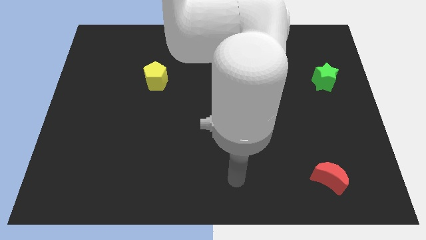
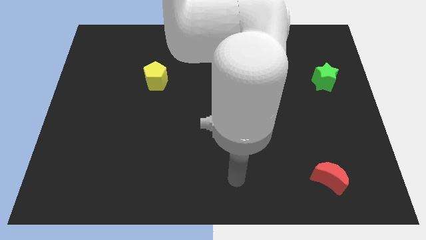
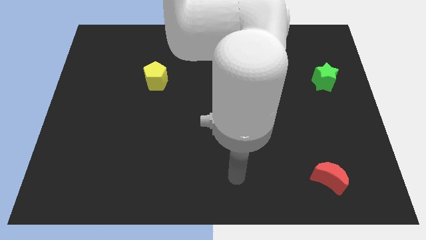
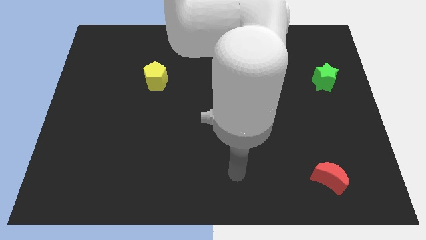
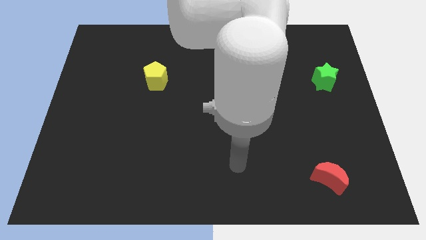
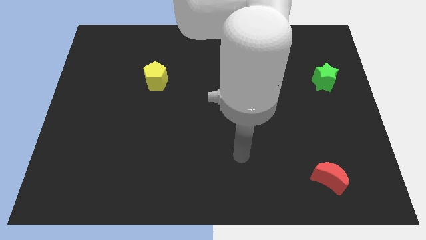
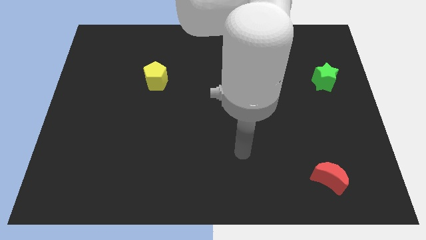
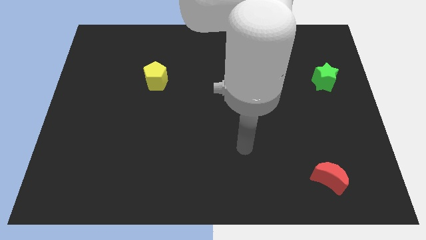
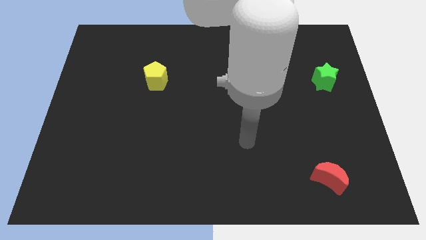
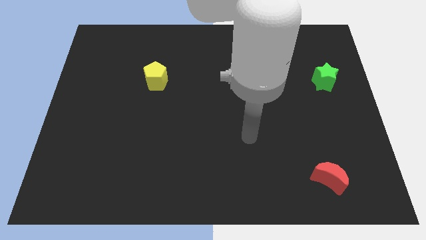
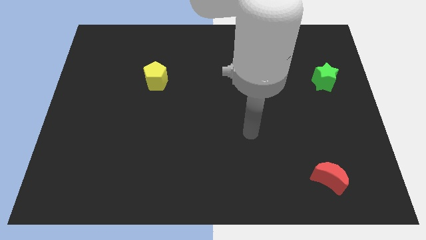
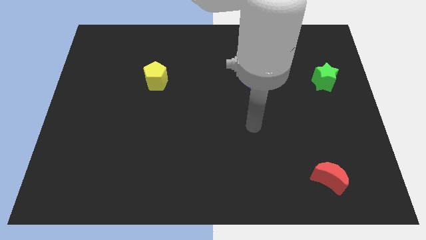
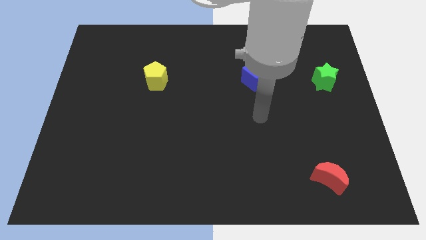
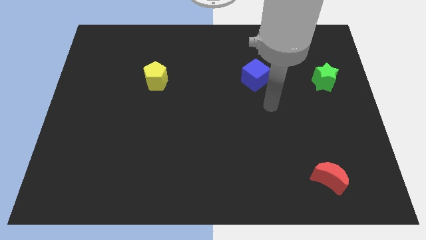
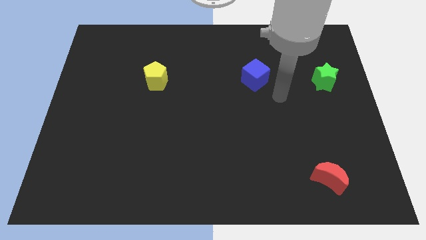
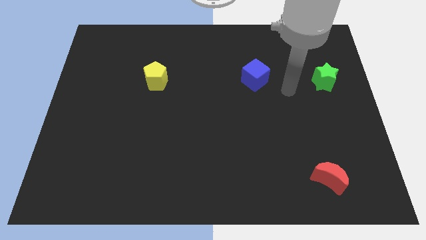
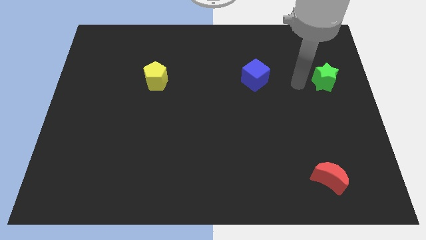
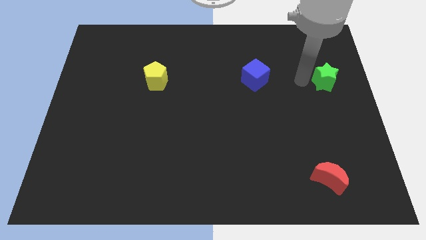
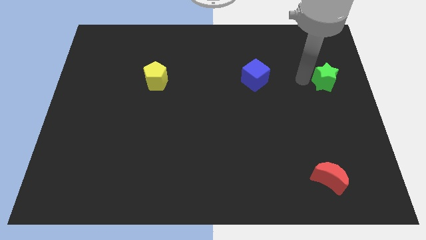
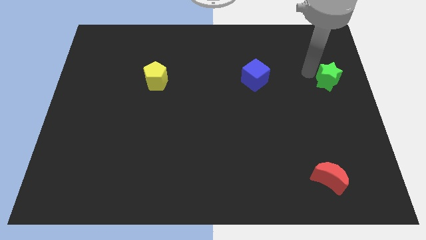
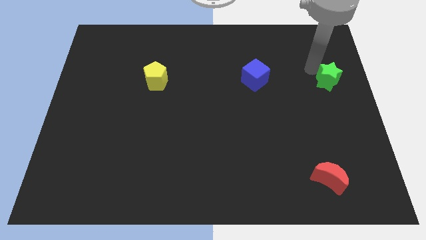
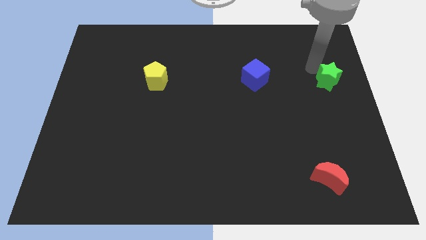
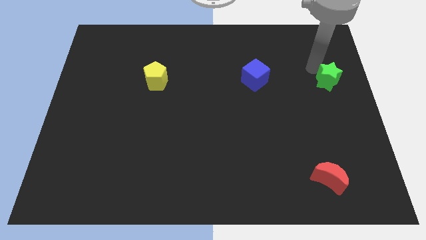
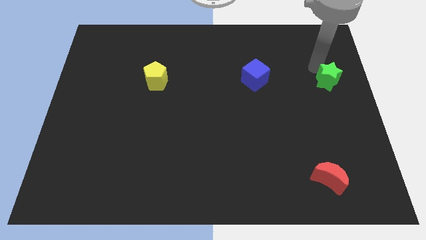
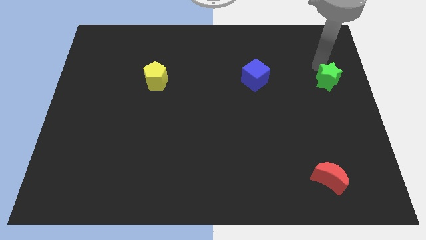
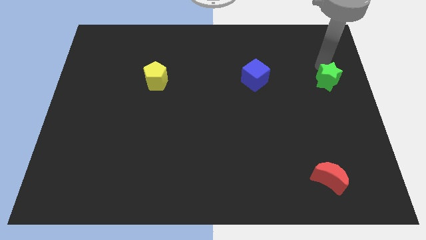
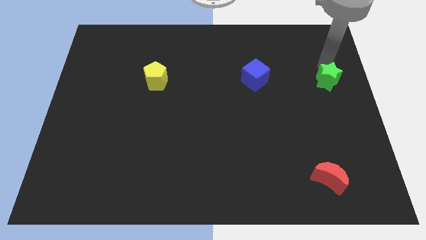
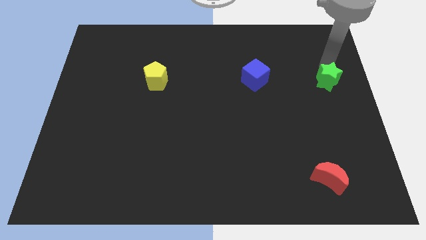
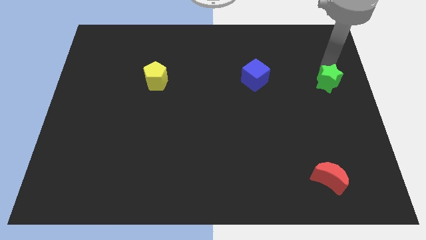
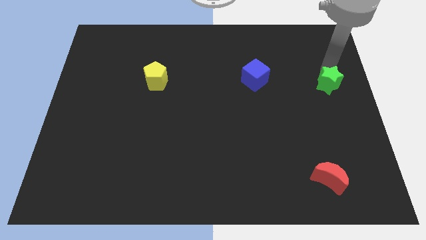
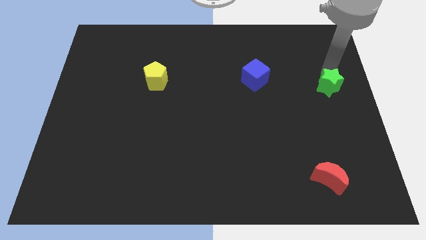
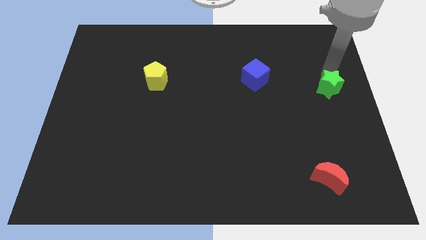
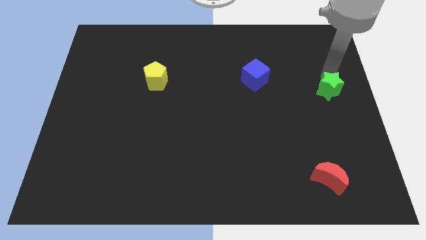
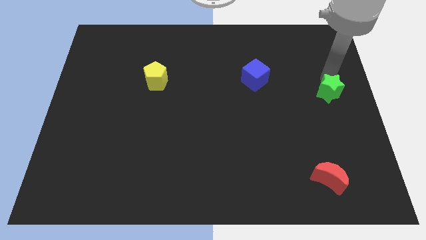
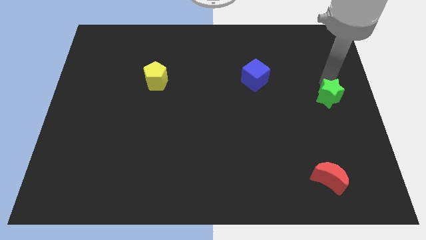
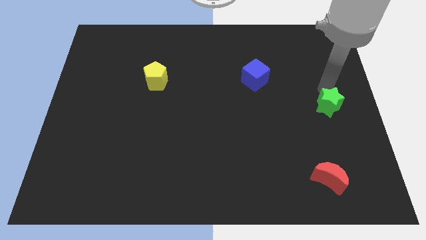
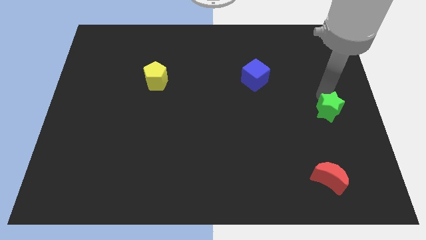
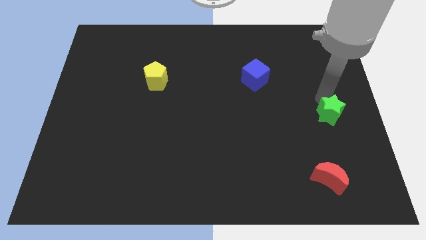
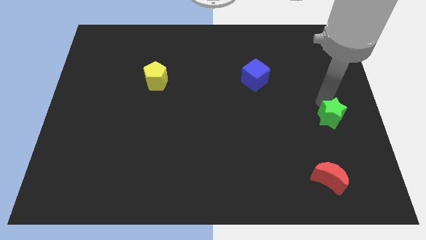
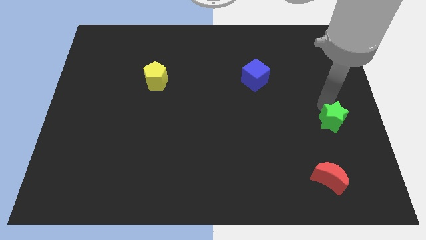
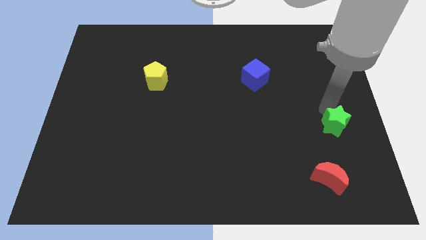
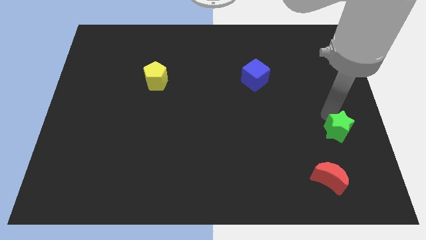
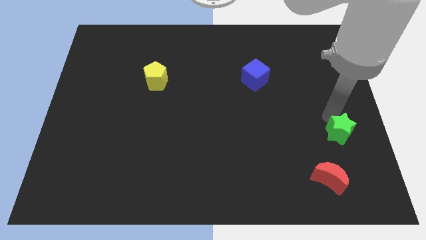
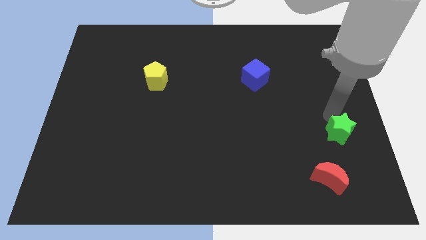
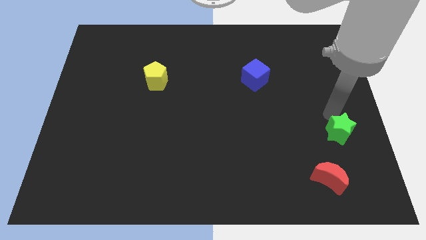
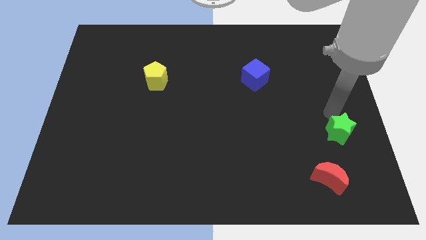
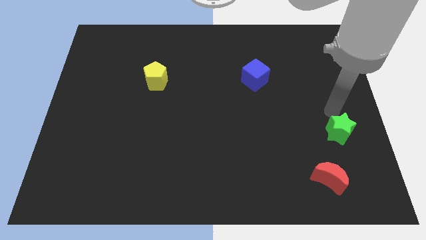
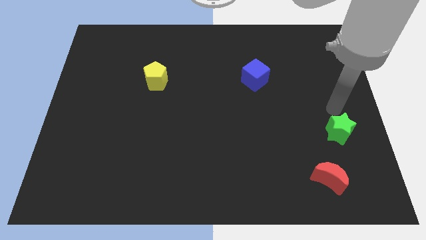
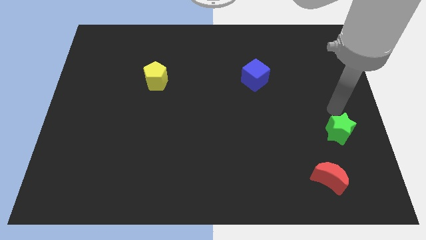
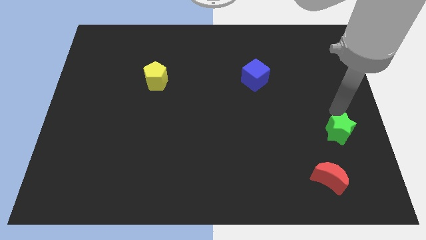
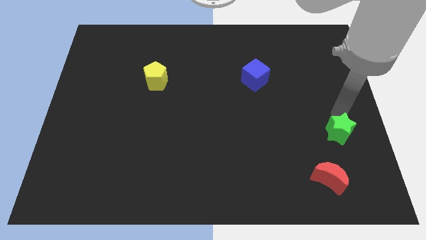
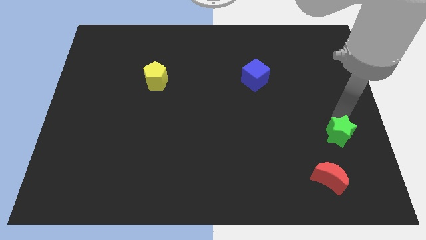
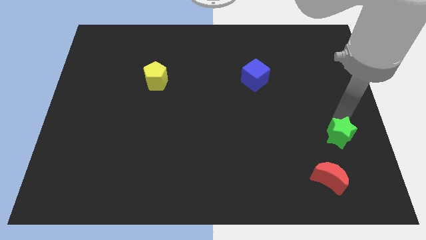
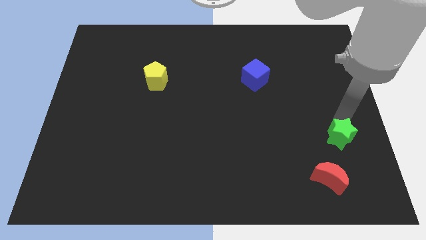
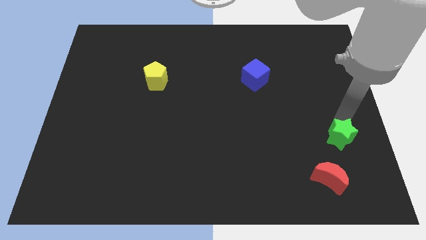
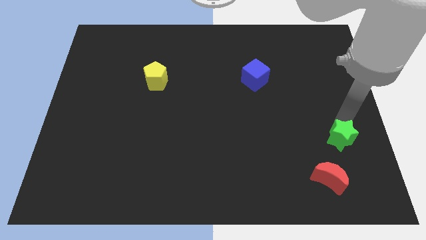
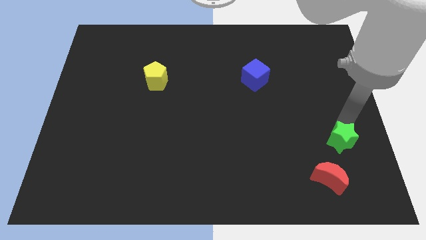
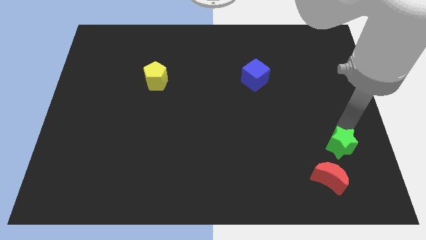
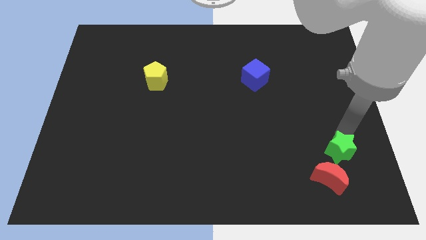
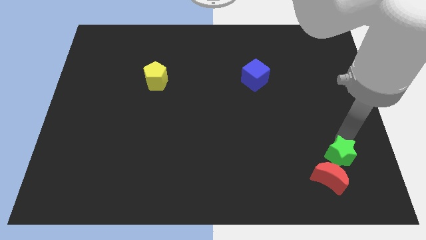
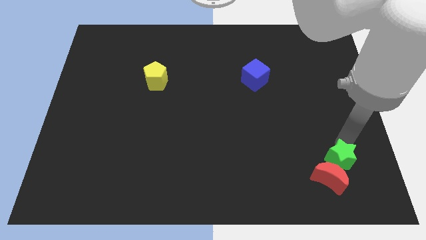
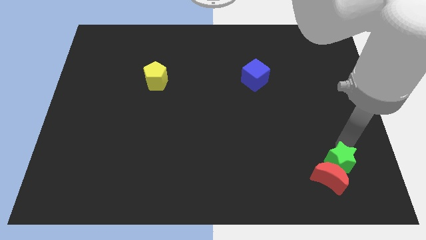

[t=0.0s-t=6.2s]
move the star to the red block

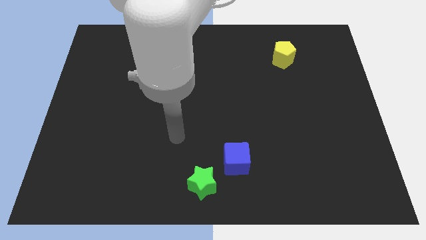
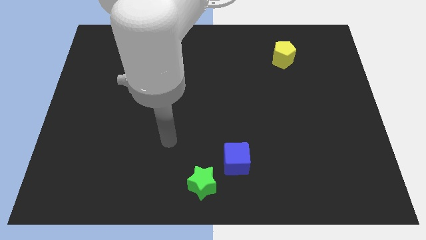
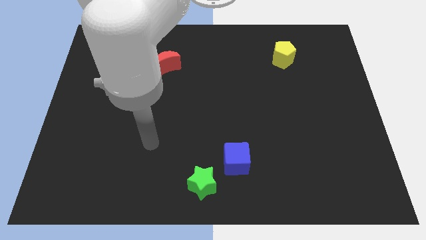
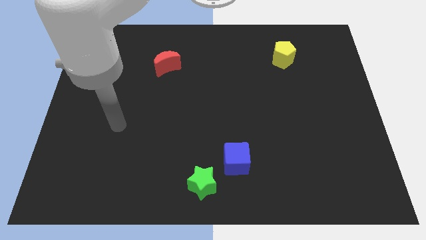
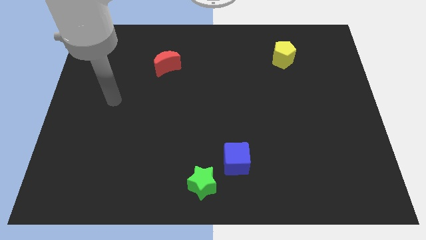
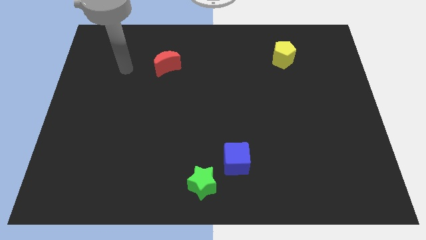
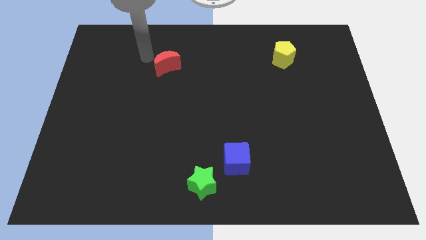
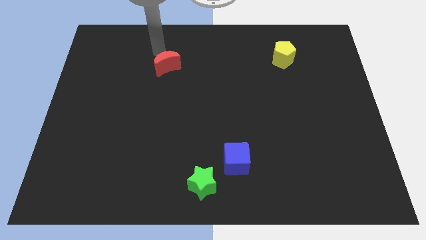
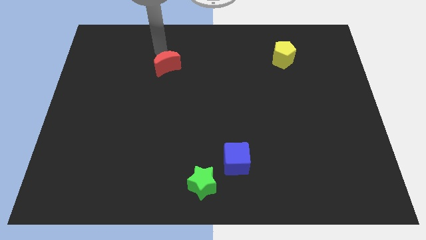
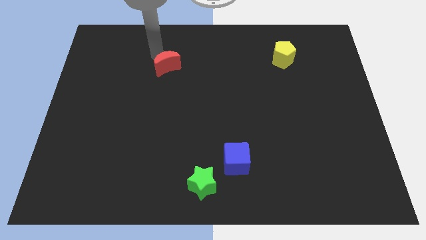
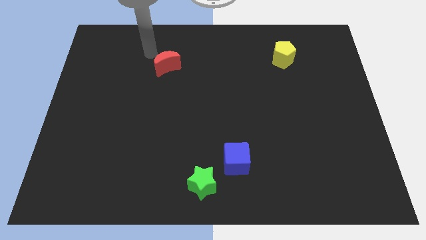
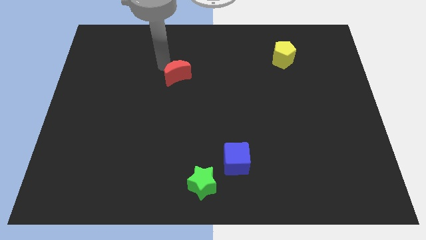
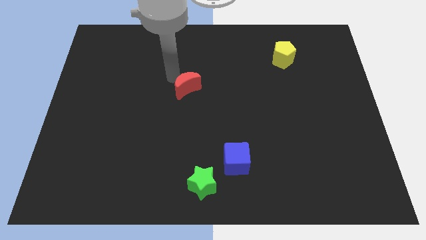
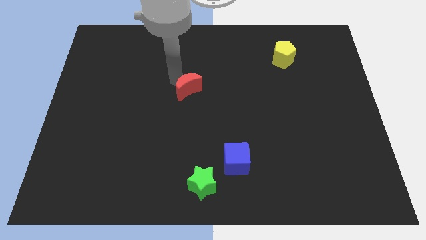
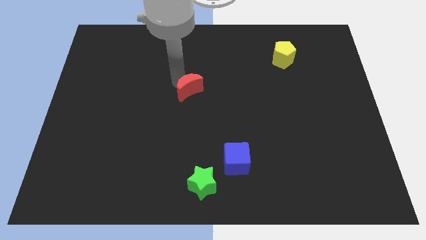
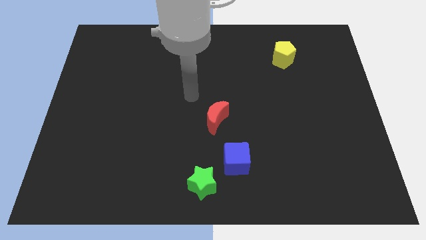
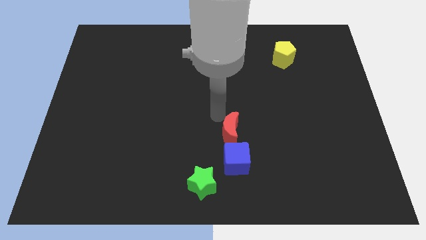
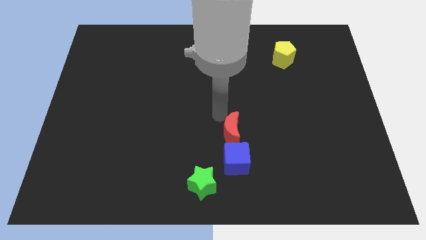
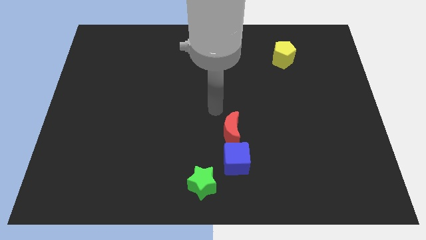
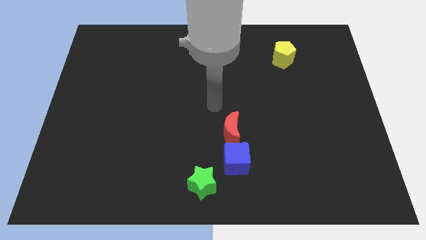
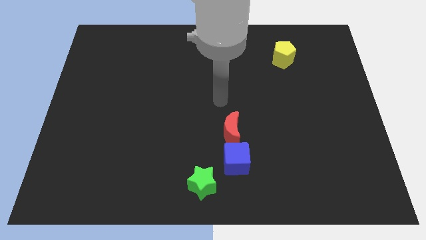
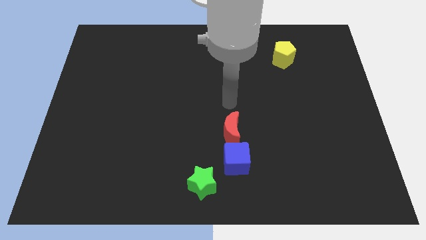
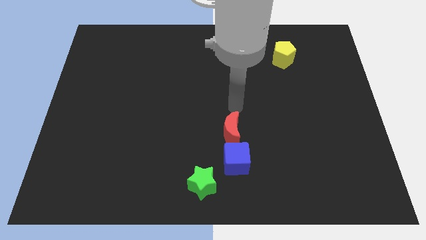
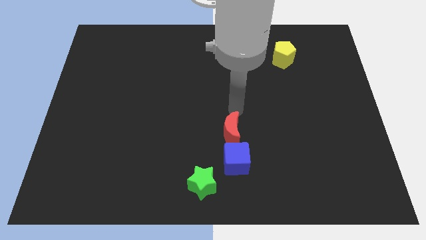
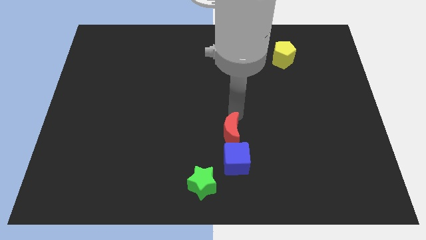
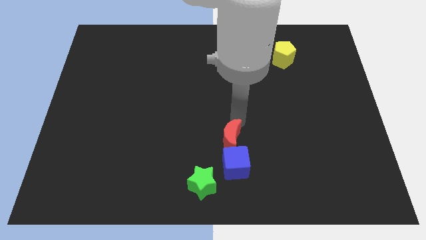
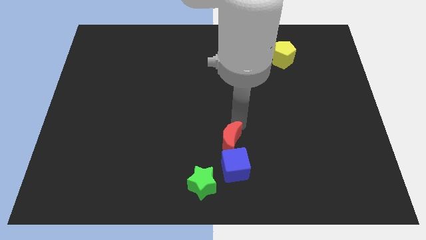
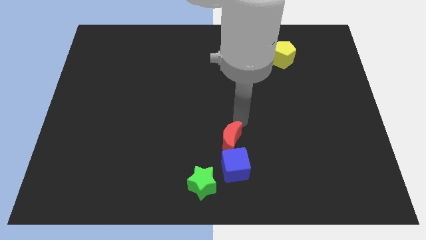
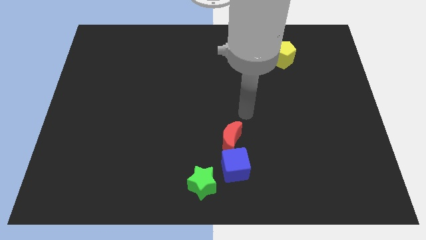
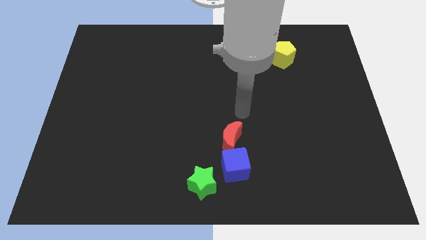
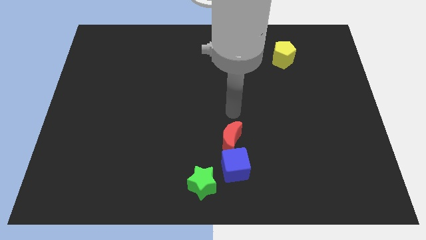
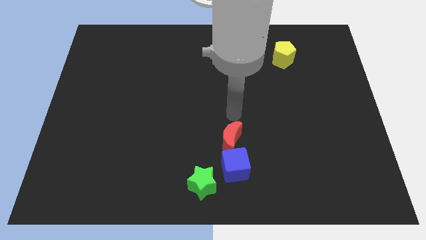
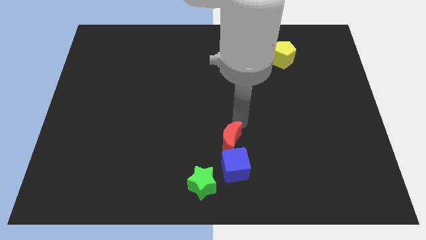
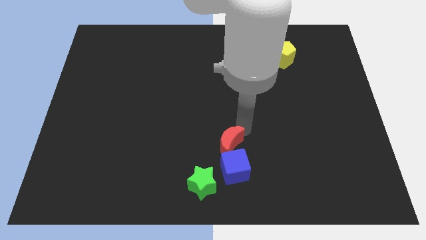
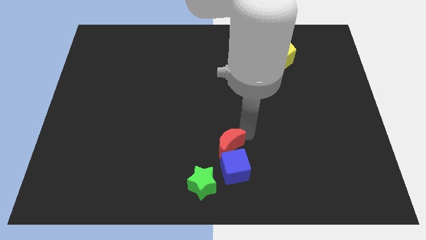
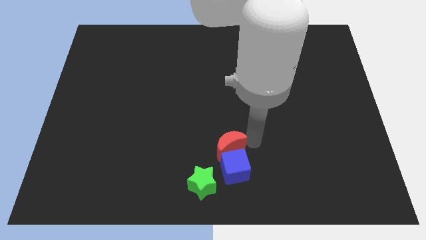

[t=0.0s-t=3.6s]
slide the moon close to the blue cube
